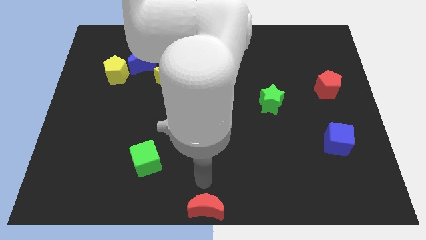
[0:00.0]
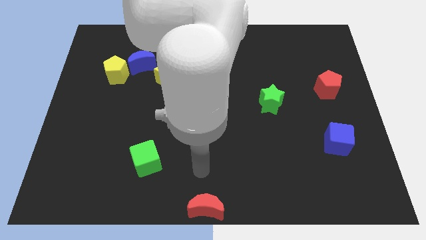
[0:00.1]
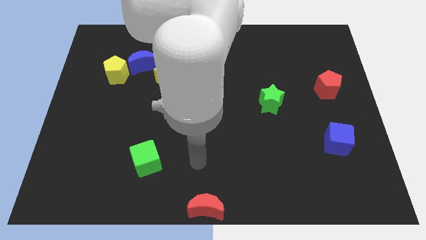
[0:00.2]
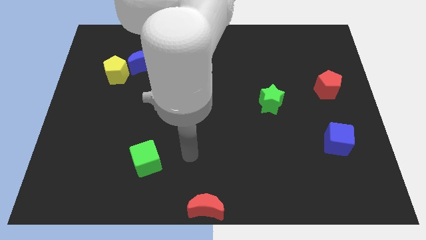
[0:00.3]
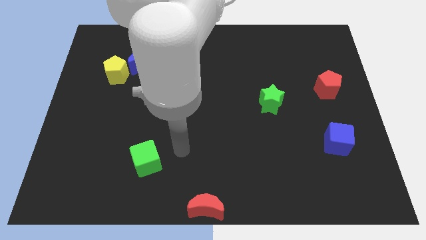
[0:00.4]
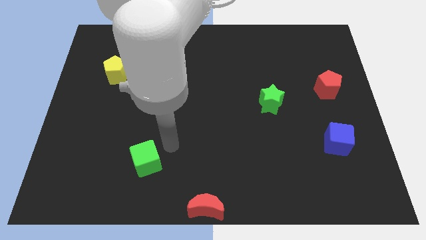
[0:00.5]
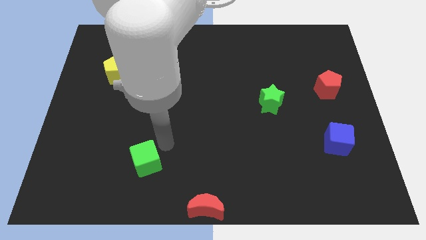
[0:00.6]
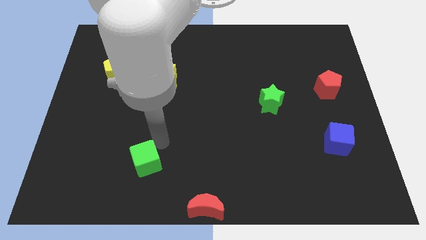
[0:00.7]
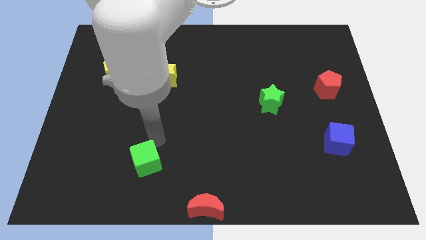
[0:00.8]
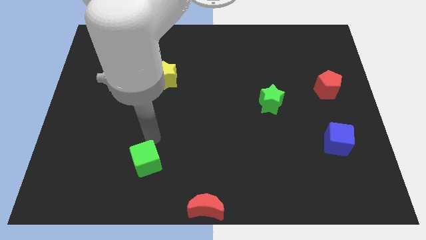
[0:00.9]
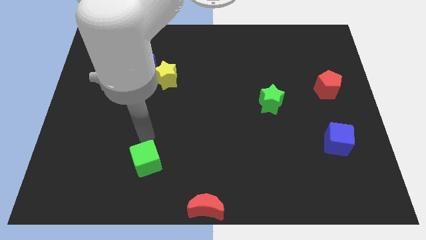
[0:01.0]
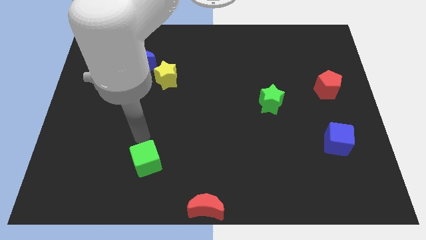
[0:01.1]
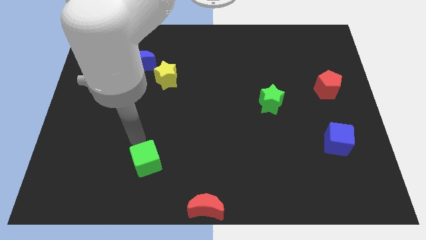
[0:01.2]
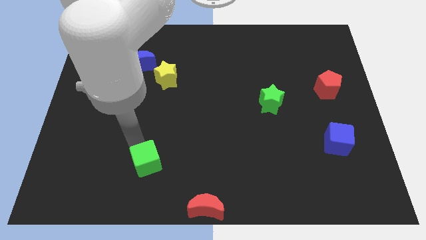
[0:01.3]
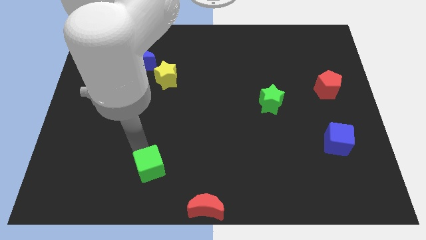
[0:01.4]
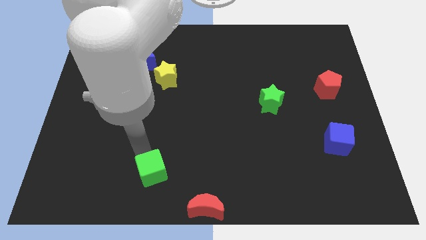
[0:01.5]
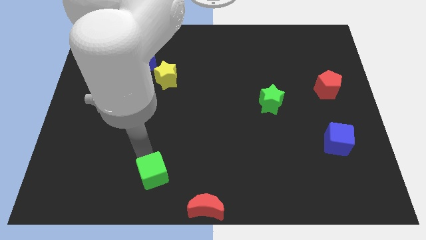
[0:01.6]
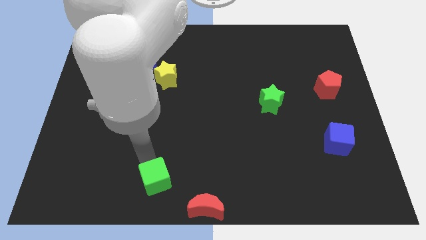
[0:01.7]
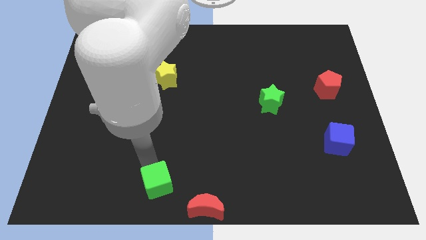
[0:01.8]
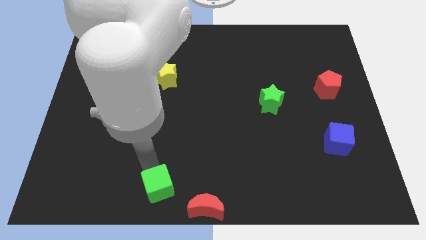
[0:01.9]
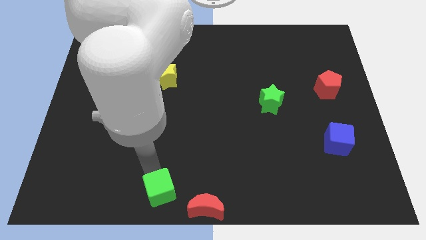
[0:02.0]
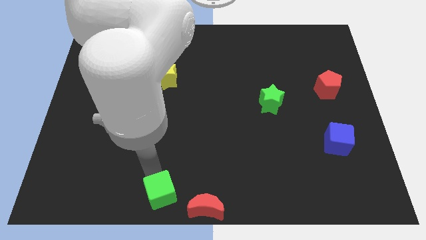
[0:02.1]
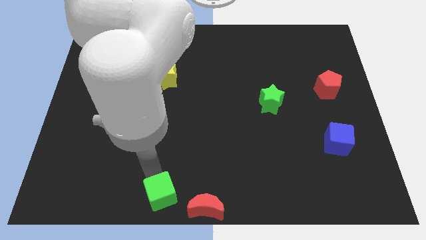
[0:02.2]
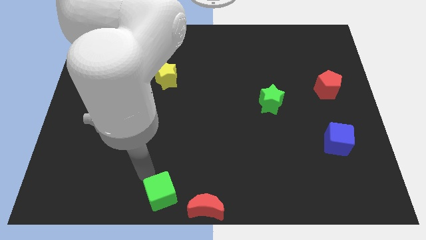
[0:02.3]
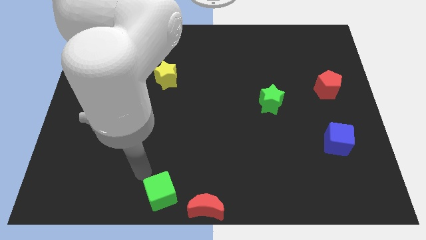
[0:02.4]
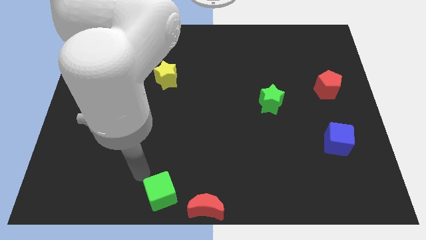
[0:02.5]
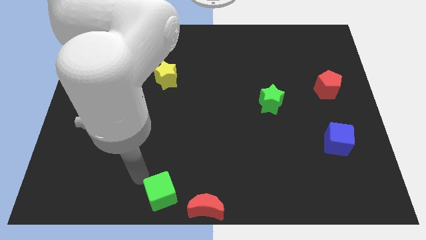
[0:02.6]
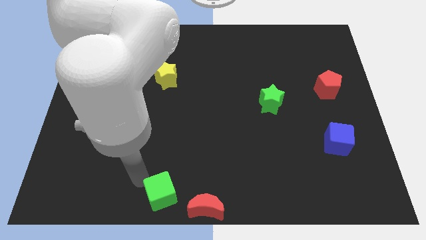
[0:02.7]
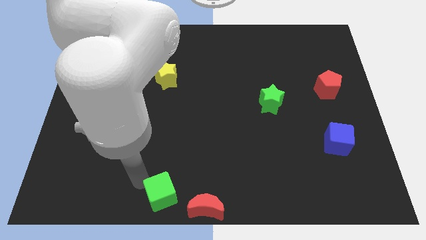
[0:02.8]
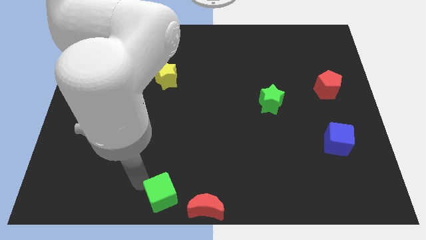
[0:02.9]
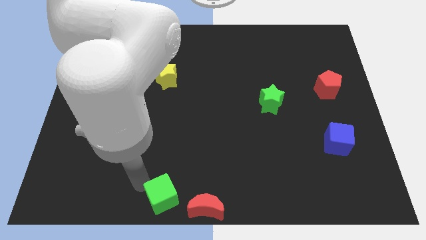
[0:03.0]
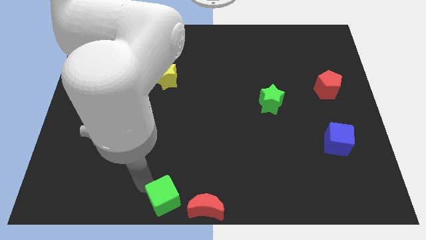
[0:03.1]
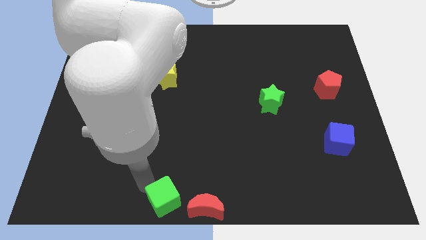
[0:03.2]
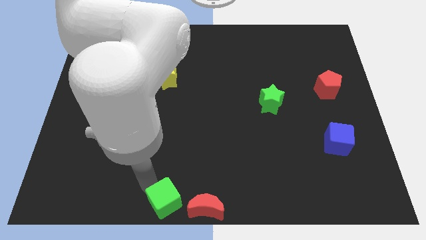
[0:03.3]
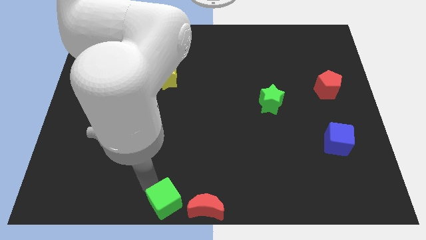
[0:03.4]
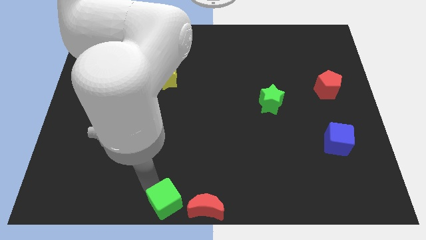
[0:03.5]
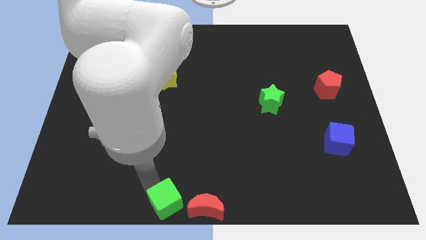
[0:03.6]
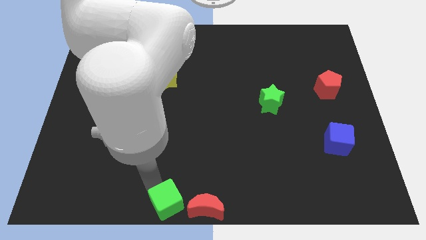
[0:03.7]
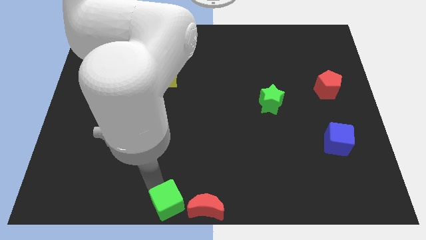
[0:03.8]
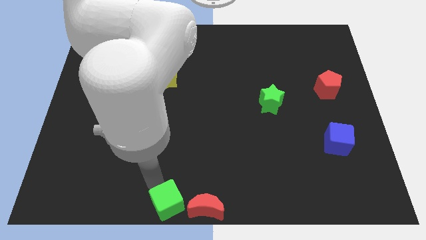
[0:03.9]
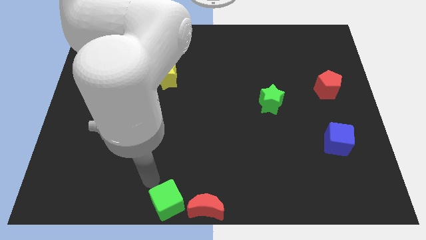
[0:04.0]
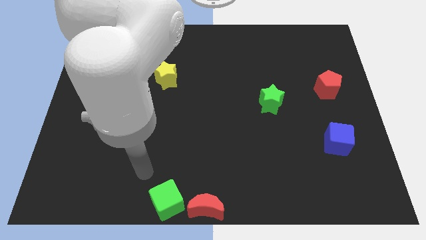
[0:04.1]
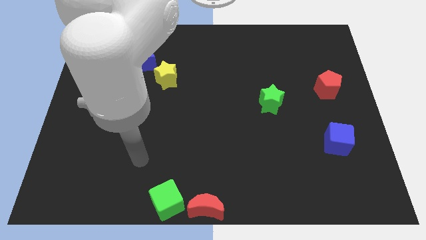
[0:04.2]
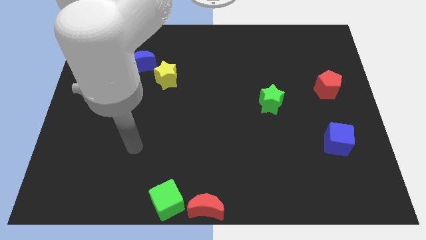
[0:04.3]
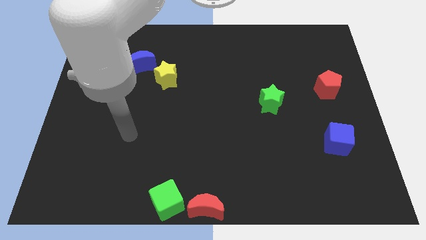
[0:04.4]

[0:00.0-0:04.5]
push the green cube to the left of the red crescent

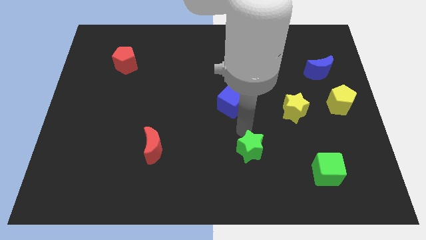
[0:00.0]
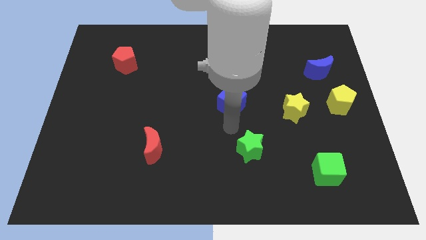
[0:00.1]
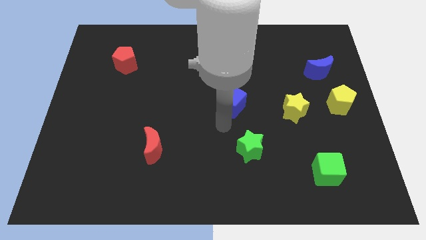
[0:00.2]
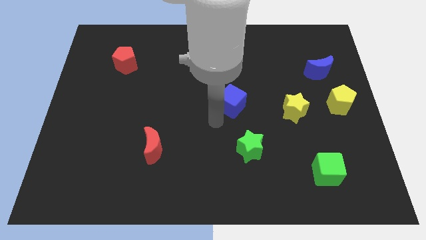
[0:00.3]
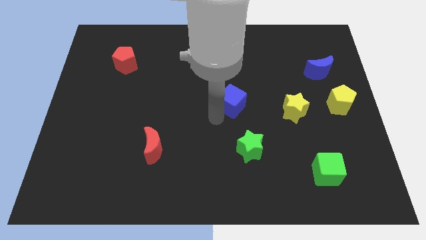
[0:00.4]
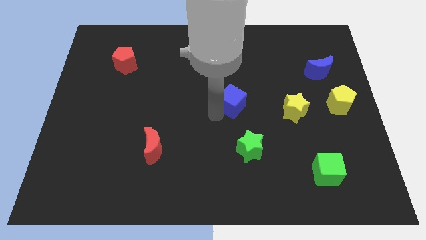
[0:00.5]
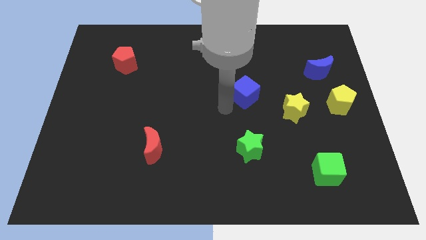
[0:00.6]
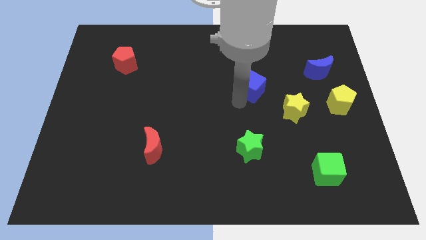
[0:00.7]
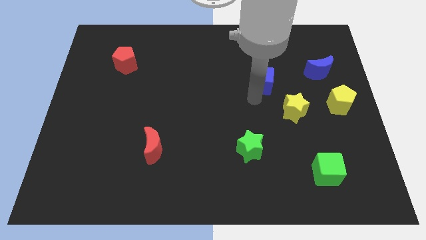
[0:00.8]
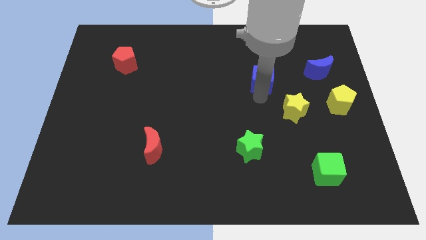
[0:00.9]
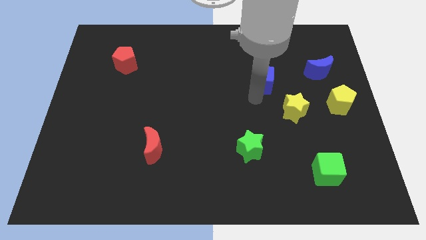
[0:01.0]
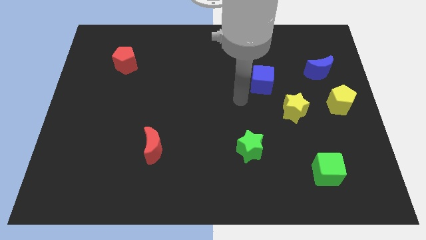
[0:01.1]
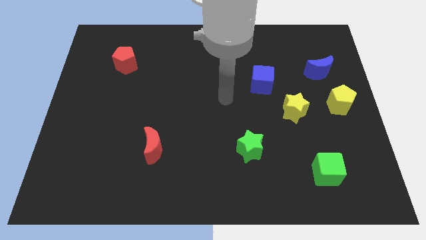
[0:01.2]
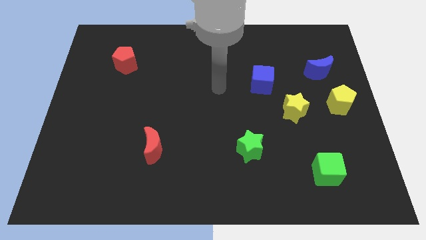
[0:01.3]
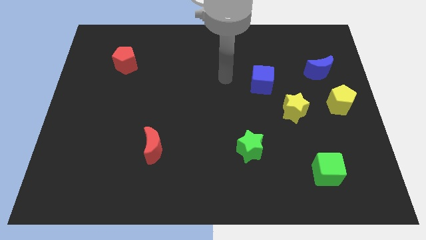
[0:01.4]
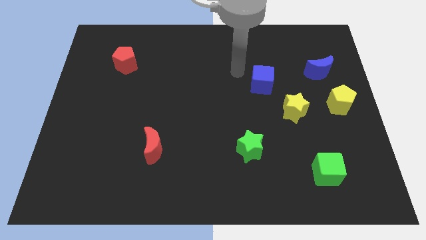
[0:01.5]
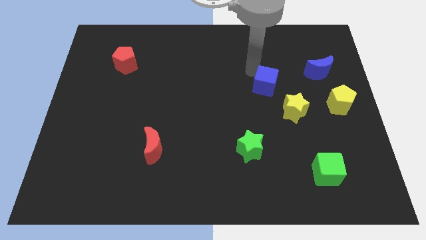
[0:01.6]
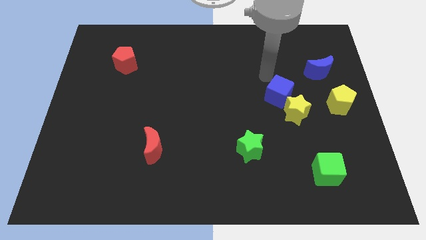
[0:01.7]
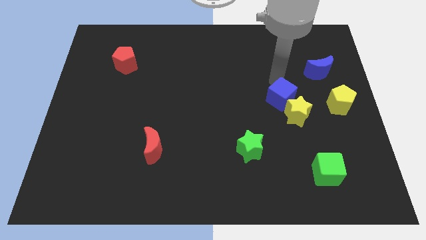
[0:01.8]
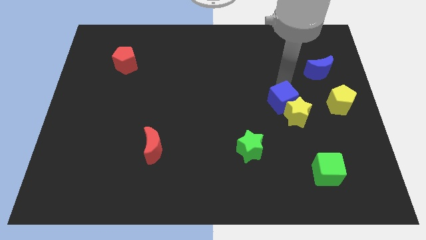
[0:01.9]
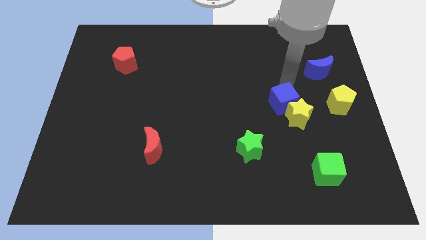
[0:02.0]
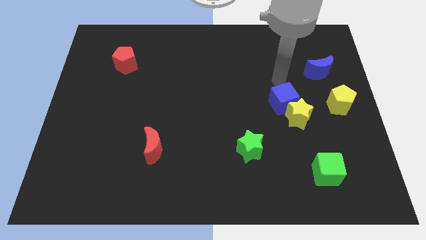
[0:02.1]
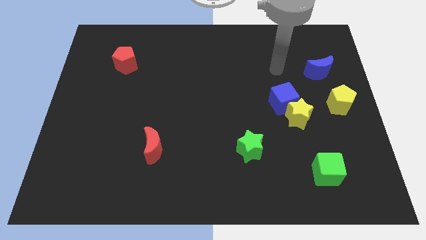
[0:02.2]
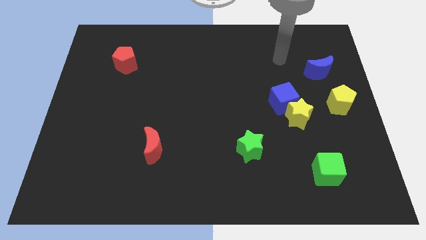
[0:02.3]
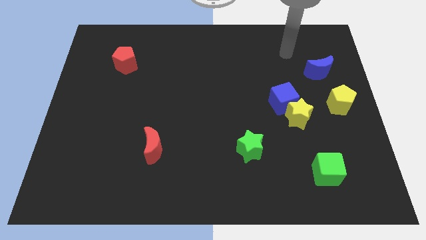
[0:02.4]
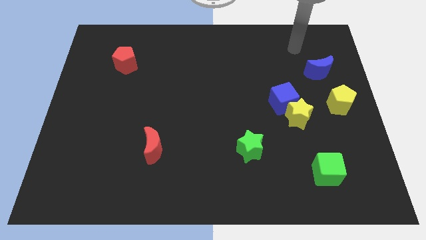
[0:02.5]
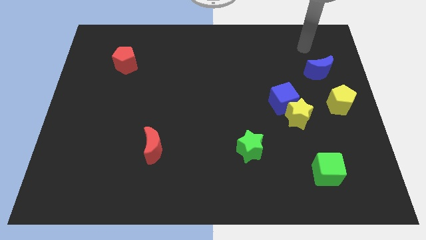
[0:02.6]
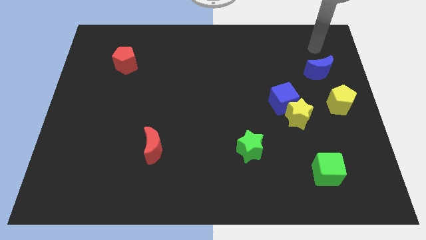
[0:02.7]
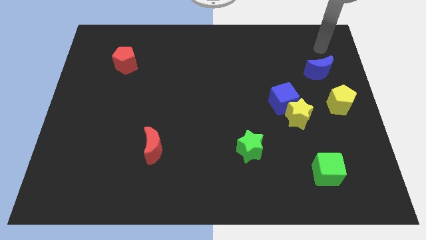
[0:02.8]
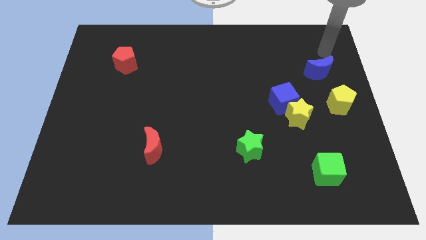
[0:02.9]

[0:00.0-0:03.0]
move the blue cube above the yellow star

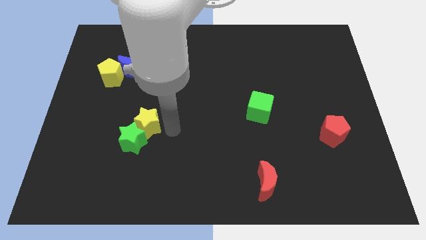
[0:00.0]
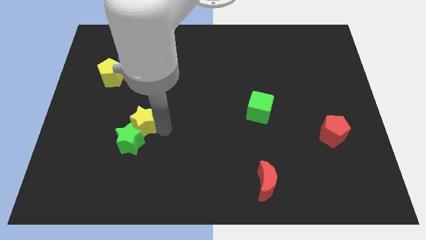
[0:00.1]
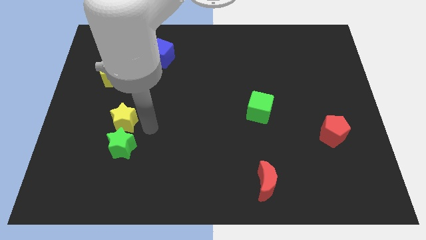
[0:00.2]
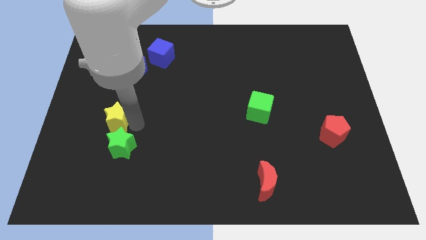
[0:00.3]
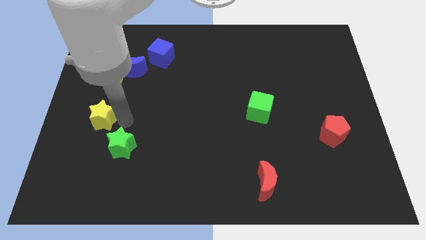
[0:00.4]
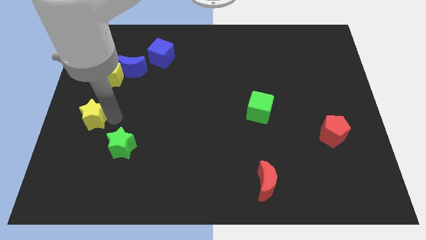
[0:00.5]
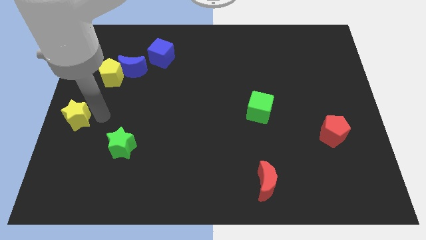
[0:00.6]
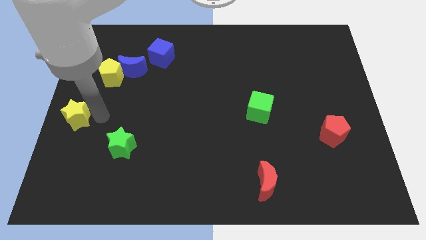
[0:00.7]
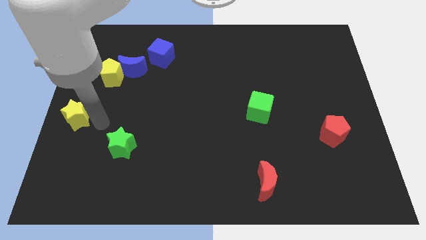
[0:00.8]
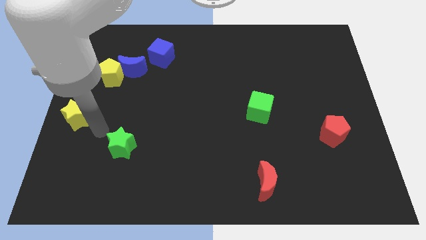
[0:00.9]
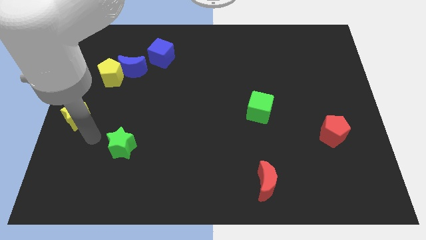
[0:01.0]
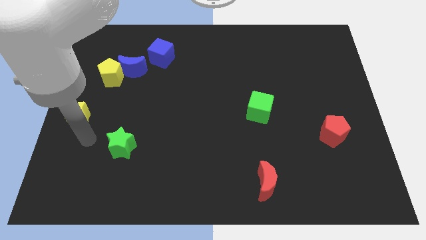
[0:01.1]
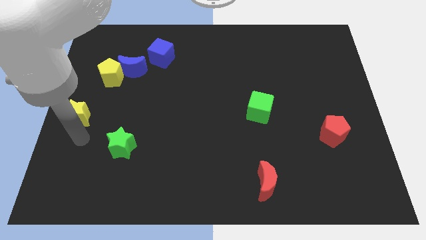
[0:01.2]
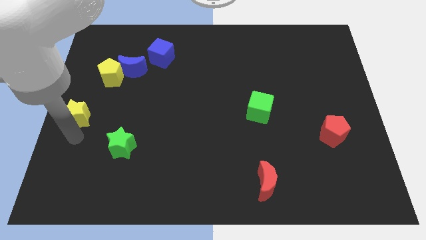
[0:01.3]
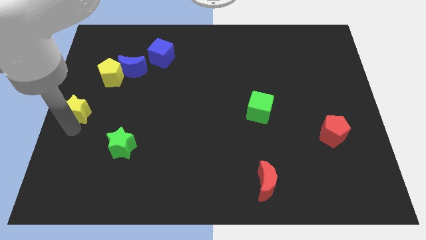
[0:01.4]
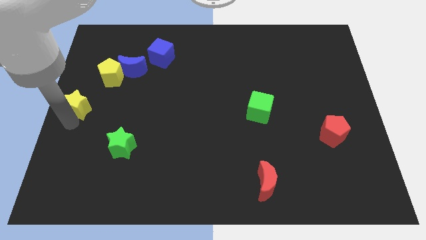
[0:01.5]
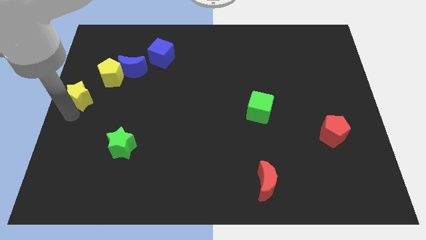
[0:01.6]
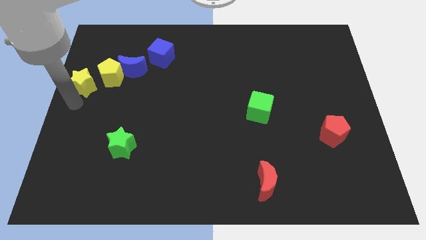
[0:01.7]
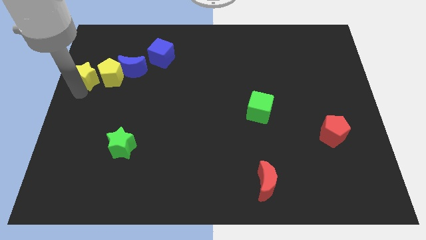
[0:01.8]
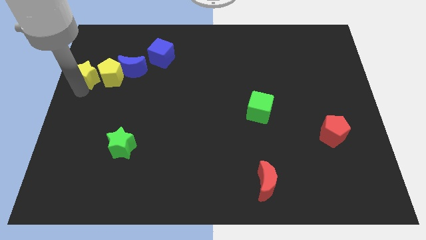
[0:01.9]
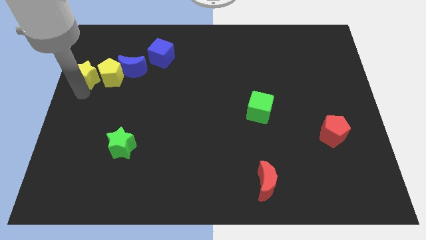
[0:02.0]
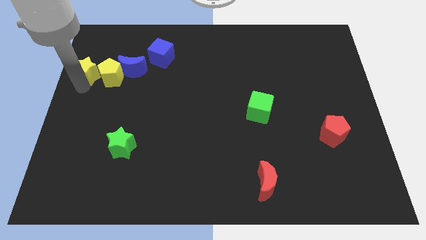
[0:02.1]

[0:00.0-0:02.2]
push the yellow star to the left of the yellow pentagon
